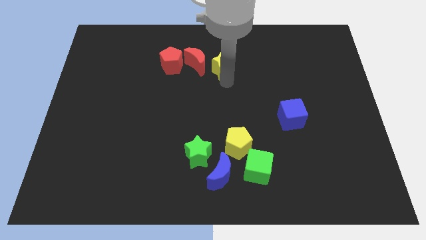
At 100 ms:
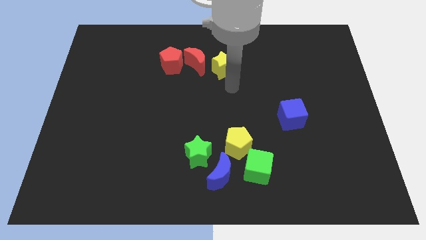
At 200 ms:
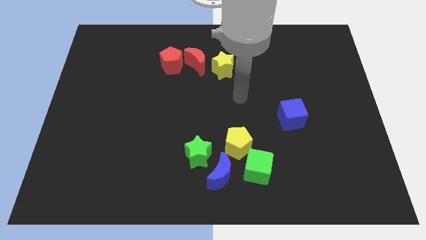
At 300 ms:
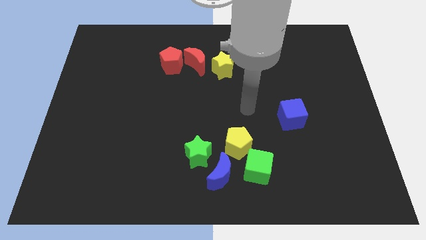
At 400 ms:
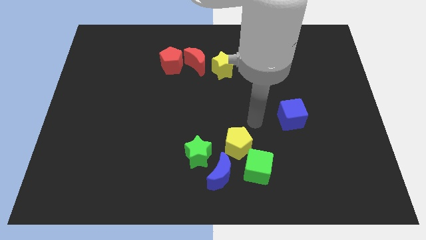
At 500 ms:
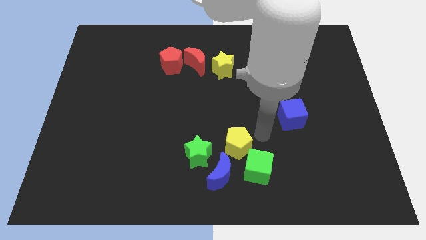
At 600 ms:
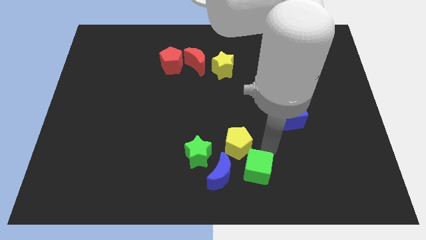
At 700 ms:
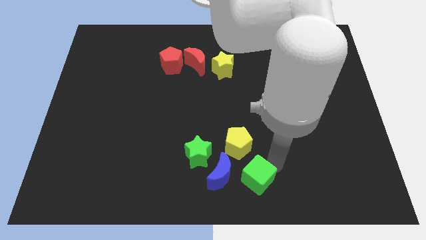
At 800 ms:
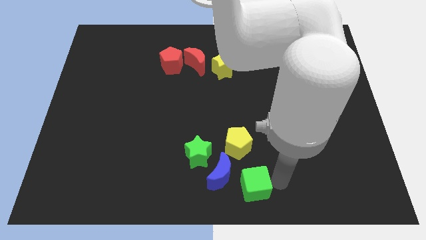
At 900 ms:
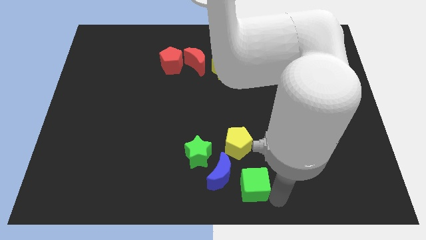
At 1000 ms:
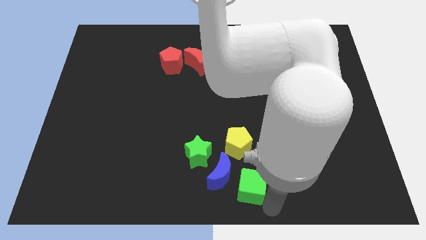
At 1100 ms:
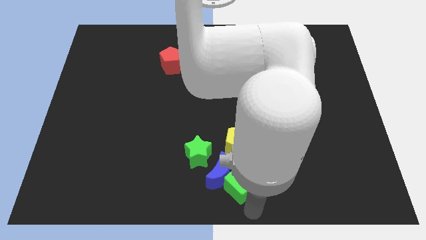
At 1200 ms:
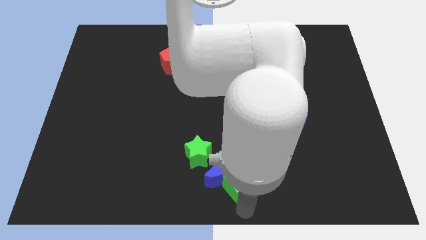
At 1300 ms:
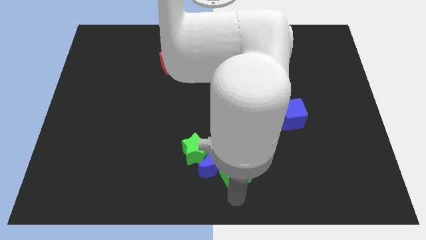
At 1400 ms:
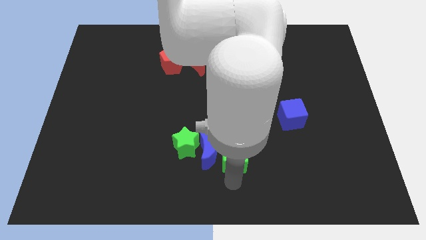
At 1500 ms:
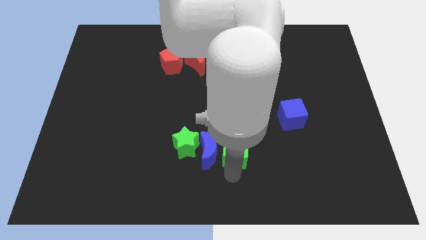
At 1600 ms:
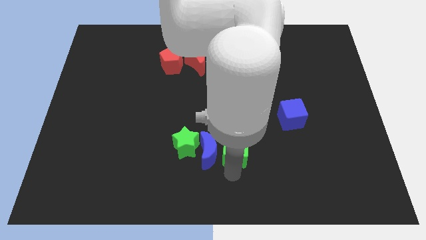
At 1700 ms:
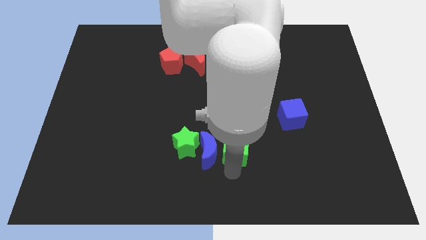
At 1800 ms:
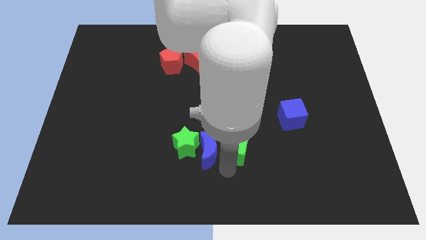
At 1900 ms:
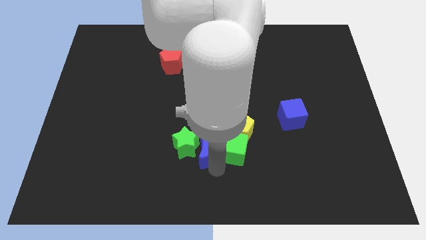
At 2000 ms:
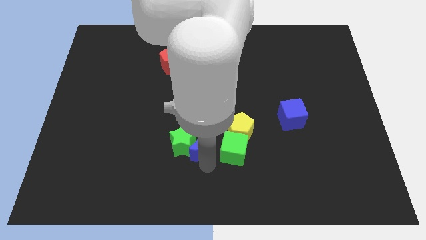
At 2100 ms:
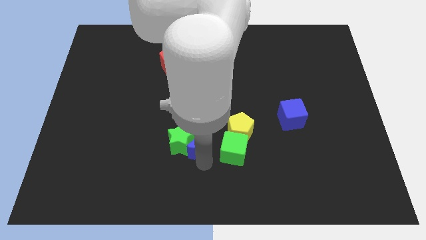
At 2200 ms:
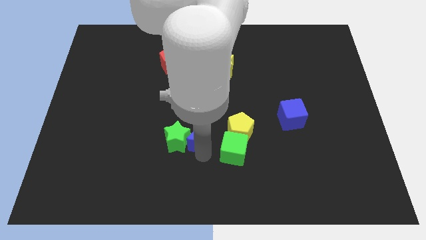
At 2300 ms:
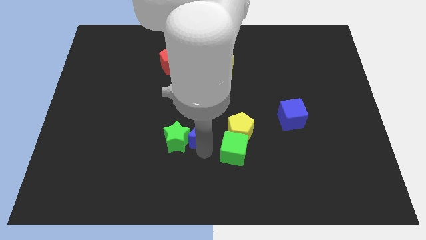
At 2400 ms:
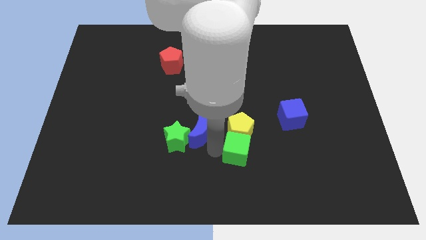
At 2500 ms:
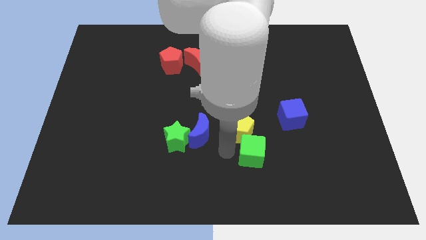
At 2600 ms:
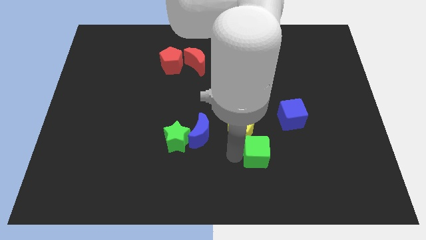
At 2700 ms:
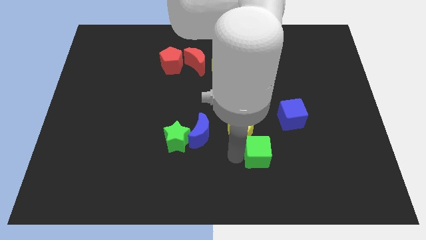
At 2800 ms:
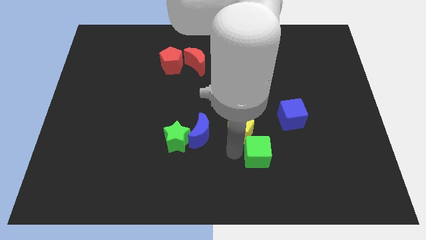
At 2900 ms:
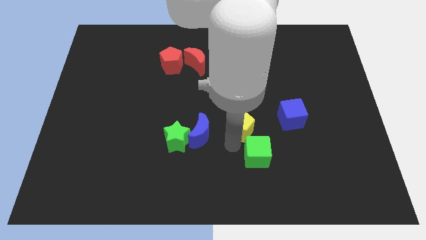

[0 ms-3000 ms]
place green cube to the bottom right of yellow pentagon

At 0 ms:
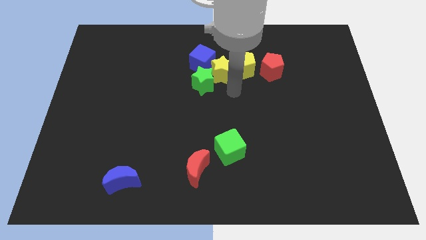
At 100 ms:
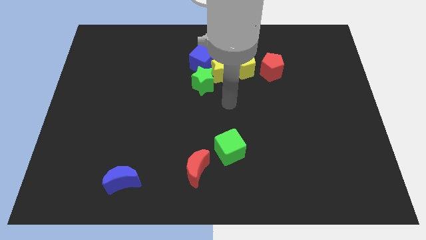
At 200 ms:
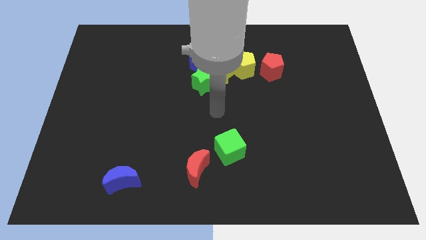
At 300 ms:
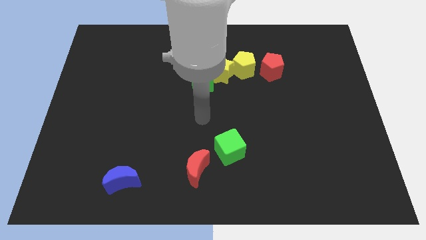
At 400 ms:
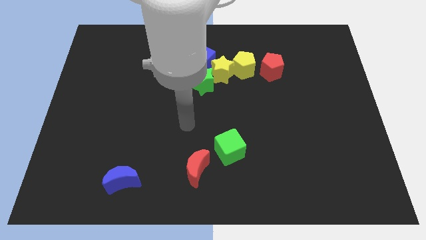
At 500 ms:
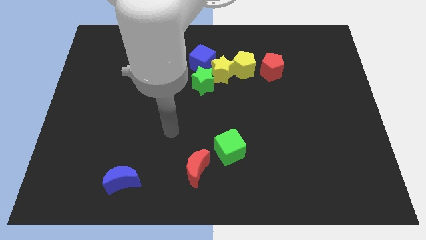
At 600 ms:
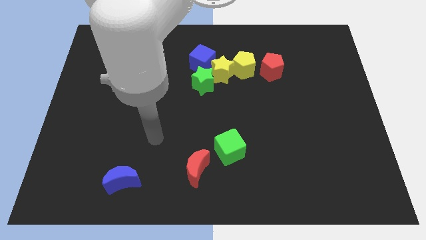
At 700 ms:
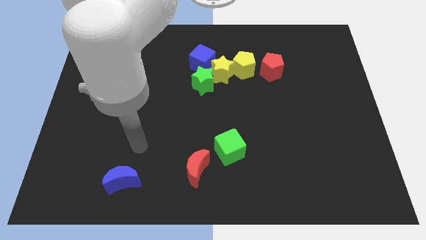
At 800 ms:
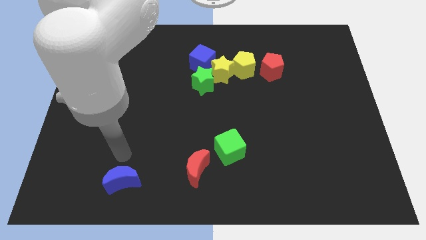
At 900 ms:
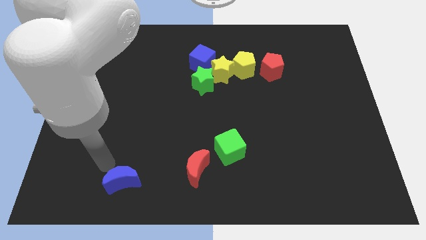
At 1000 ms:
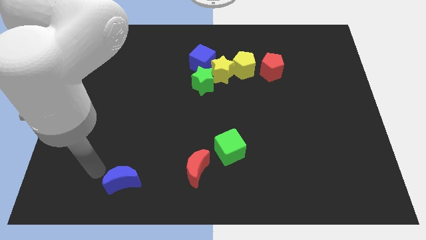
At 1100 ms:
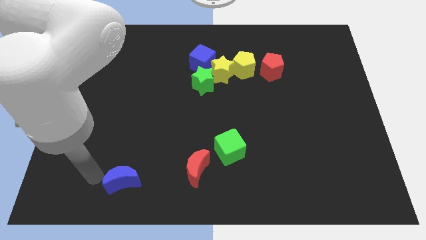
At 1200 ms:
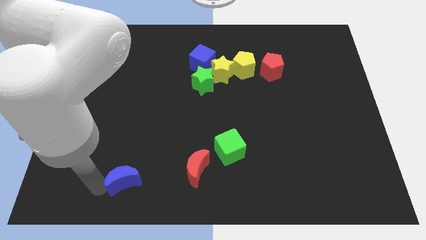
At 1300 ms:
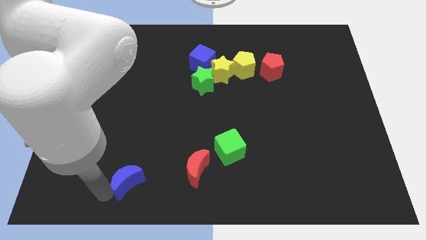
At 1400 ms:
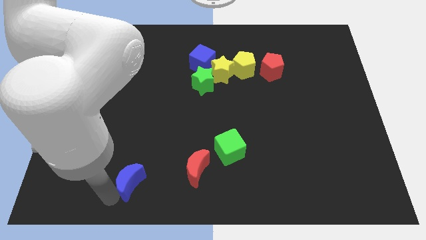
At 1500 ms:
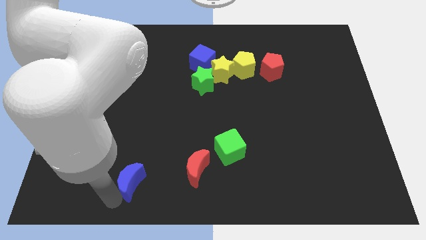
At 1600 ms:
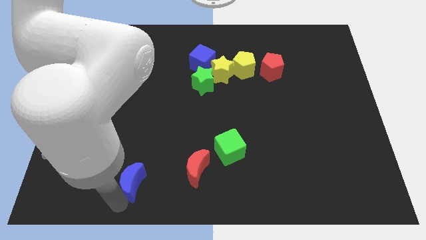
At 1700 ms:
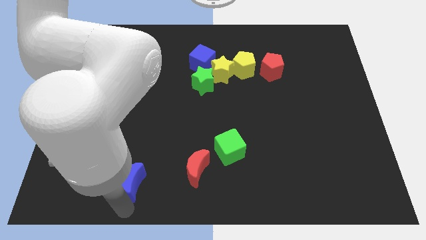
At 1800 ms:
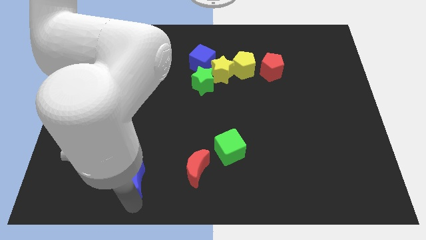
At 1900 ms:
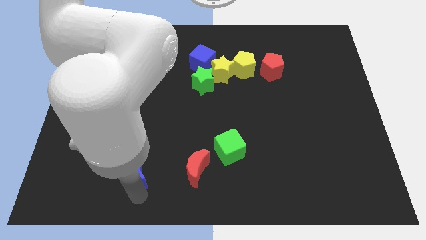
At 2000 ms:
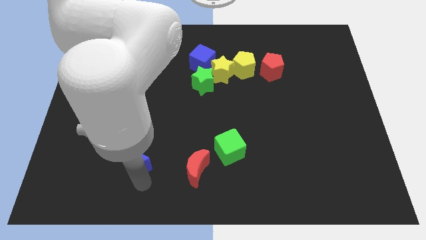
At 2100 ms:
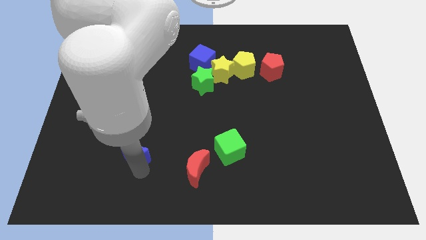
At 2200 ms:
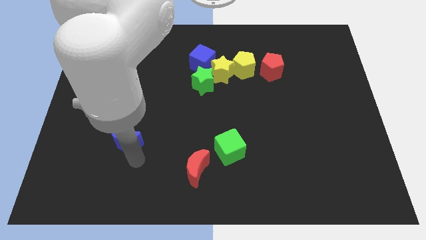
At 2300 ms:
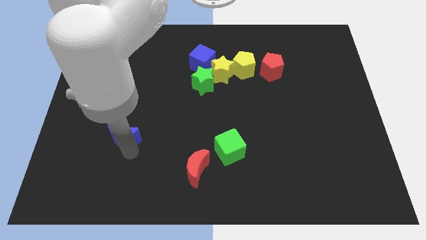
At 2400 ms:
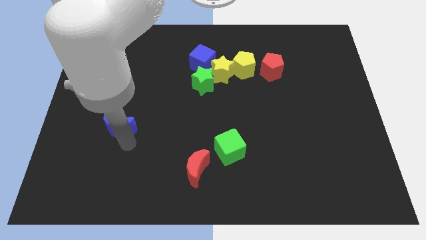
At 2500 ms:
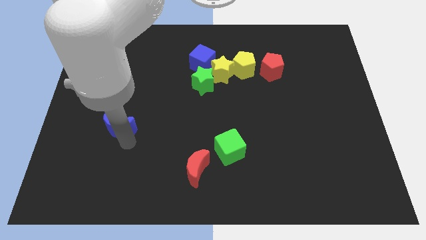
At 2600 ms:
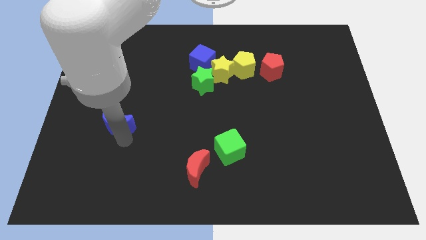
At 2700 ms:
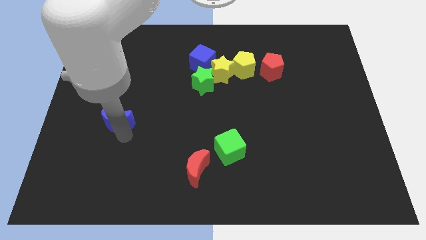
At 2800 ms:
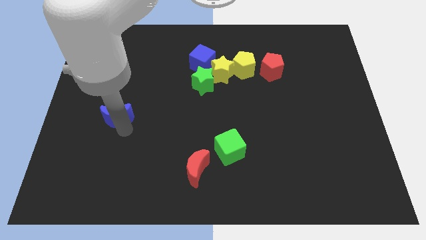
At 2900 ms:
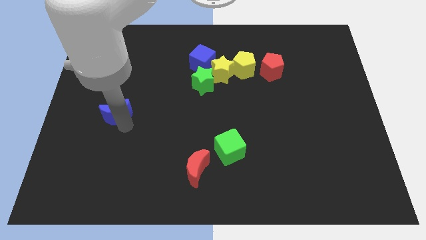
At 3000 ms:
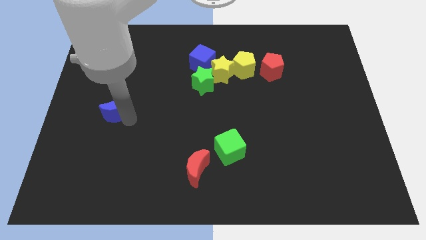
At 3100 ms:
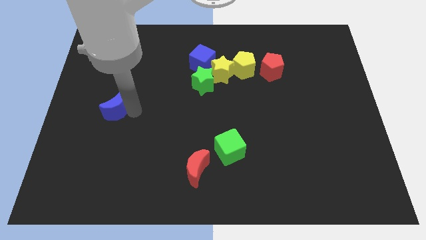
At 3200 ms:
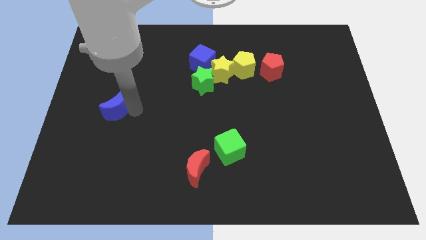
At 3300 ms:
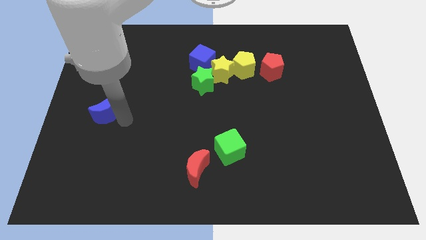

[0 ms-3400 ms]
move the blue crescent to the center left of the table

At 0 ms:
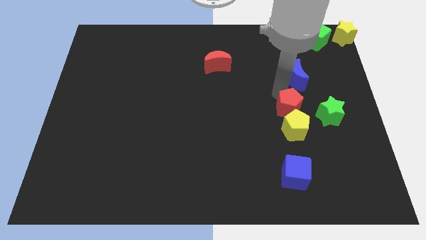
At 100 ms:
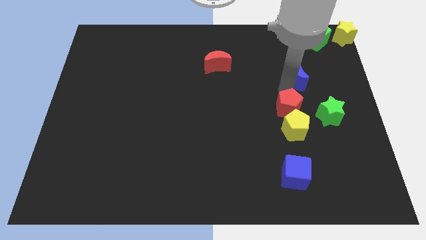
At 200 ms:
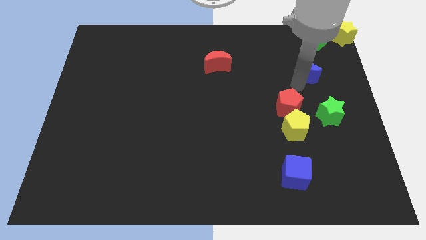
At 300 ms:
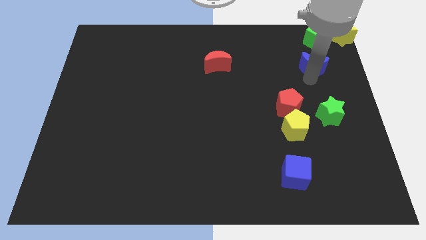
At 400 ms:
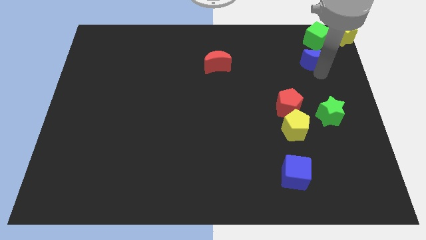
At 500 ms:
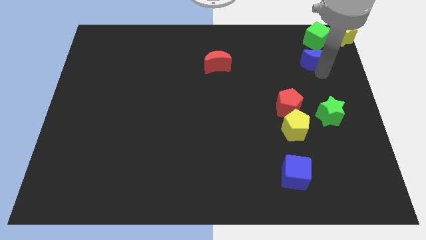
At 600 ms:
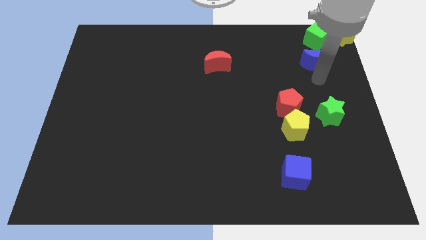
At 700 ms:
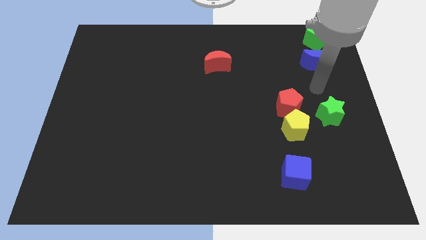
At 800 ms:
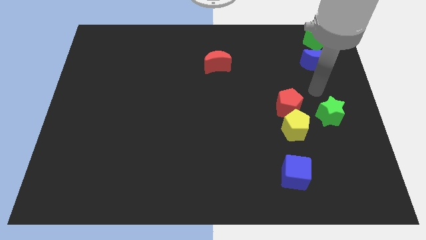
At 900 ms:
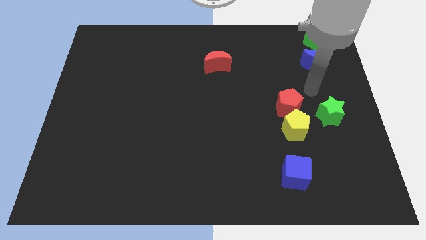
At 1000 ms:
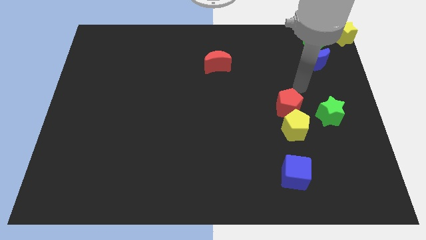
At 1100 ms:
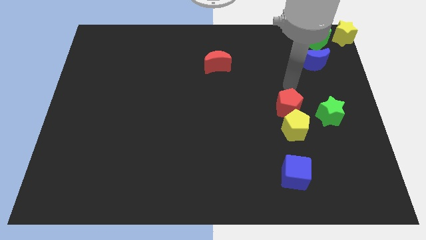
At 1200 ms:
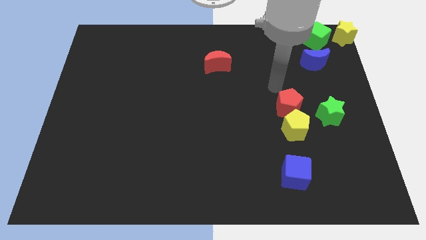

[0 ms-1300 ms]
place the blue moon below the green cube

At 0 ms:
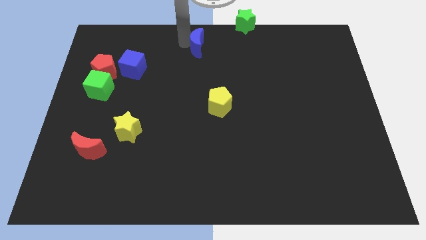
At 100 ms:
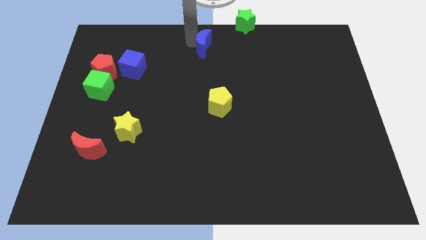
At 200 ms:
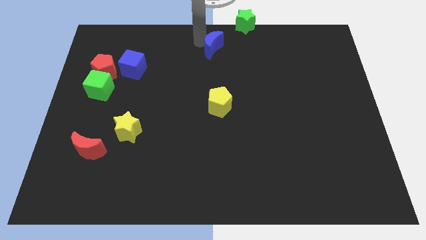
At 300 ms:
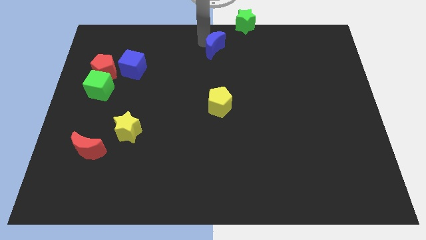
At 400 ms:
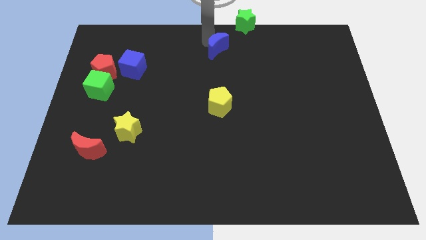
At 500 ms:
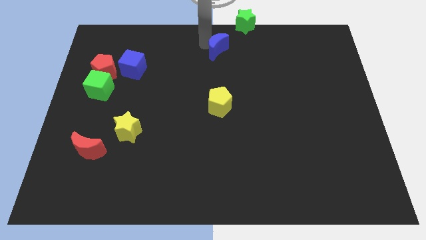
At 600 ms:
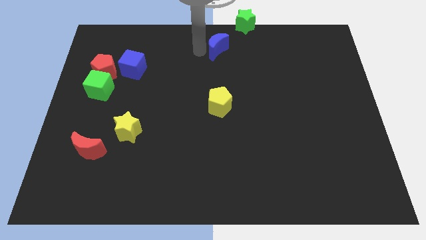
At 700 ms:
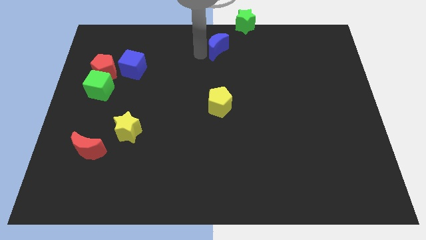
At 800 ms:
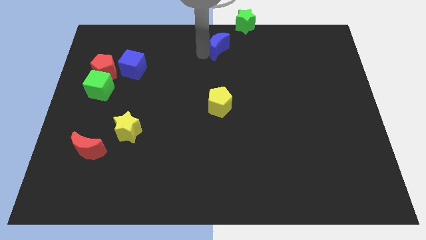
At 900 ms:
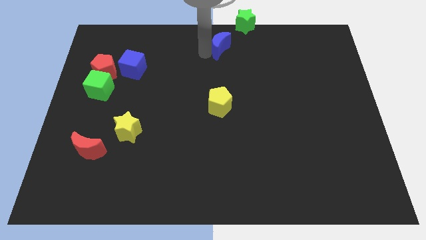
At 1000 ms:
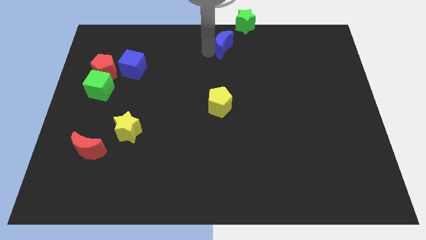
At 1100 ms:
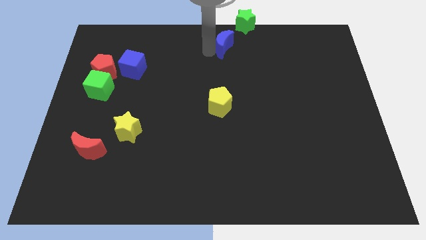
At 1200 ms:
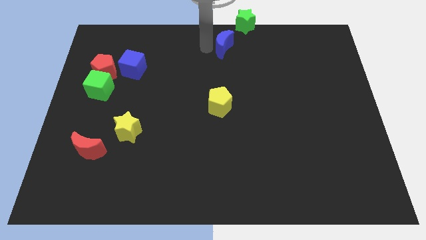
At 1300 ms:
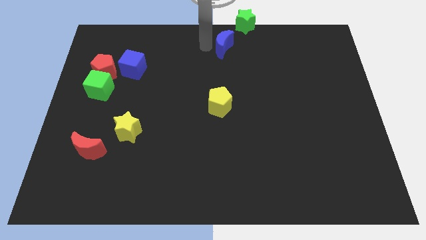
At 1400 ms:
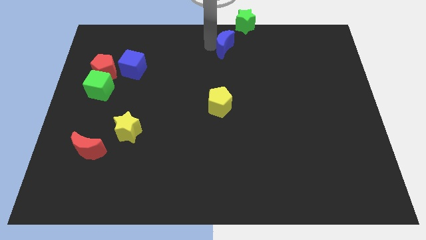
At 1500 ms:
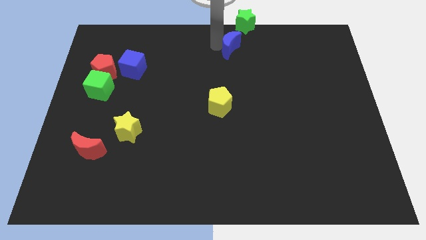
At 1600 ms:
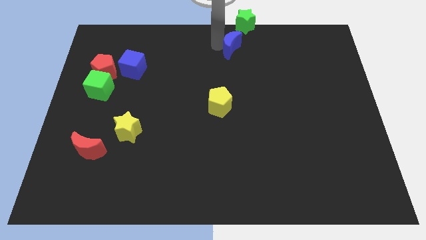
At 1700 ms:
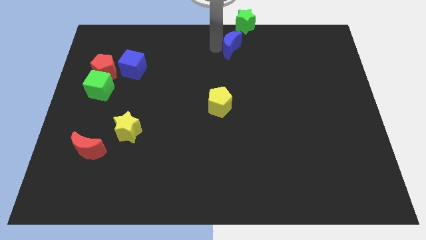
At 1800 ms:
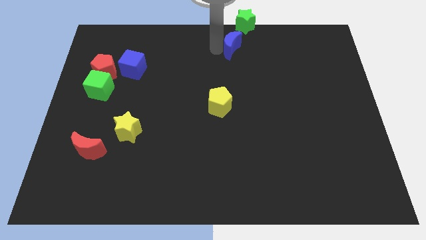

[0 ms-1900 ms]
place blue crescent below green star
